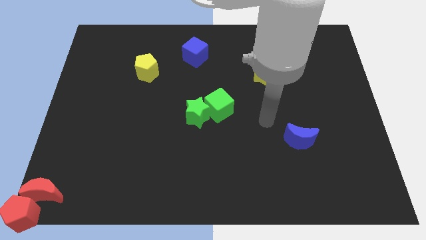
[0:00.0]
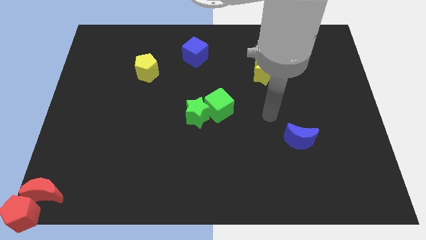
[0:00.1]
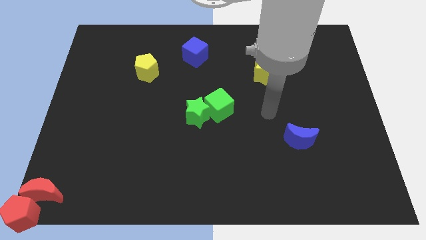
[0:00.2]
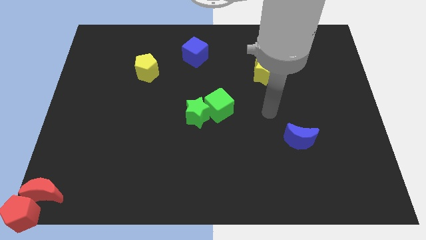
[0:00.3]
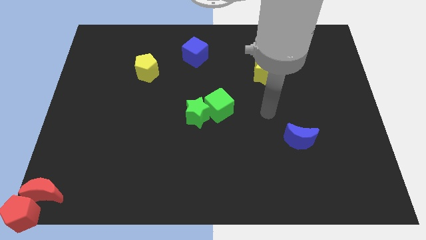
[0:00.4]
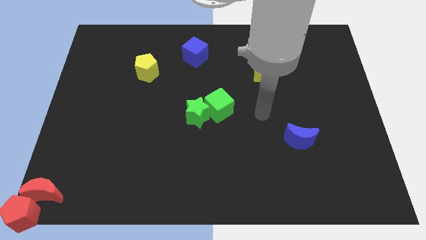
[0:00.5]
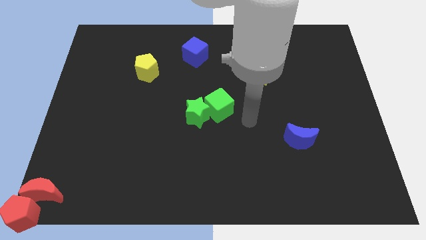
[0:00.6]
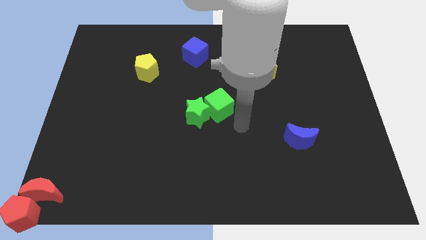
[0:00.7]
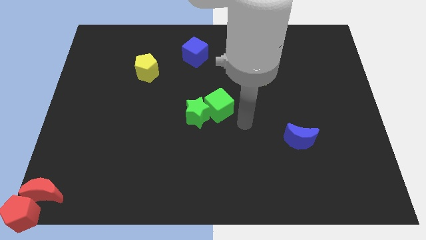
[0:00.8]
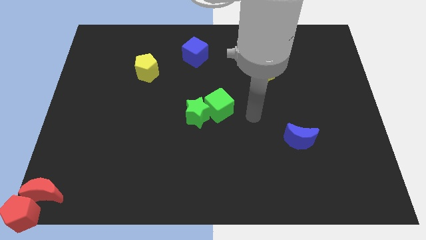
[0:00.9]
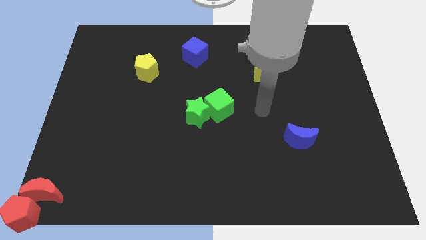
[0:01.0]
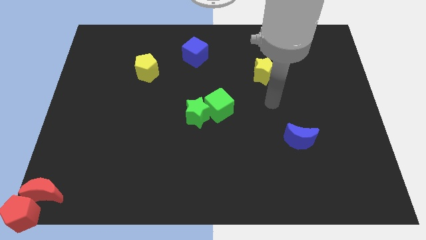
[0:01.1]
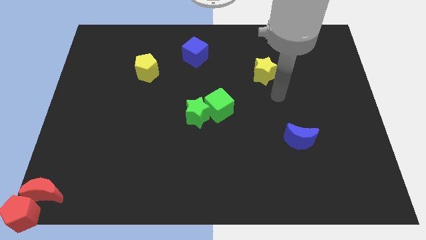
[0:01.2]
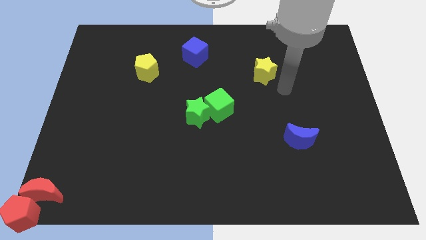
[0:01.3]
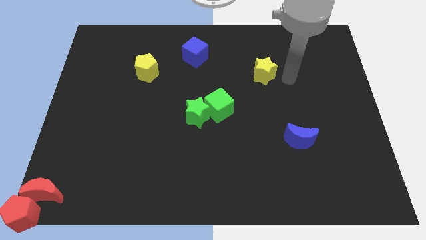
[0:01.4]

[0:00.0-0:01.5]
place your arm to the right of yellow star

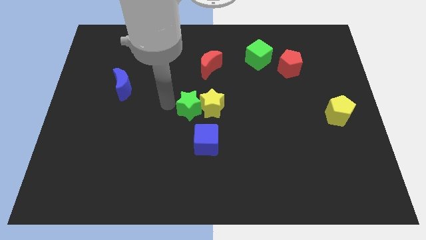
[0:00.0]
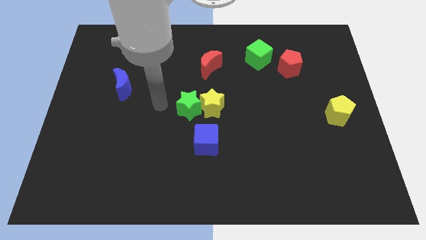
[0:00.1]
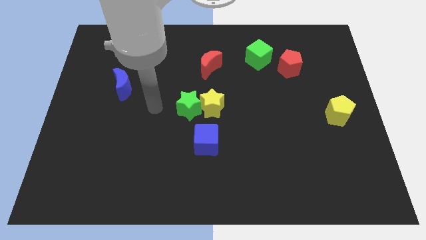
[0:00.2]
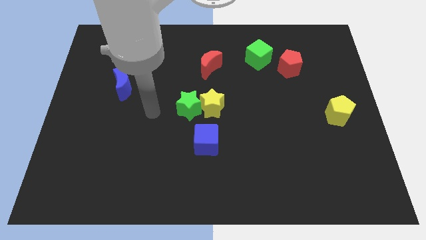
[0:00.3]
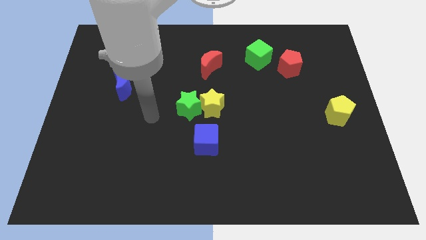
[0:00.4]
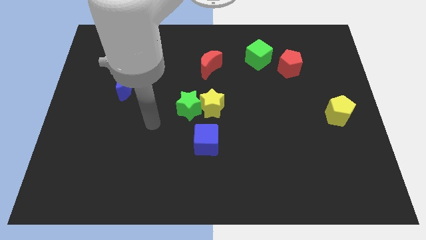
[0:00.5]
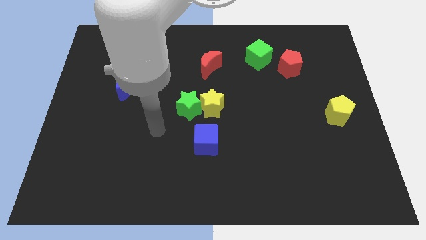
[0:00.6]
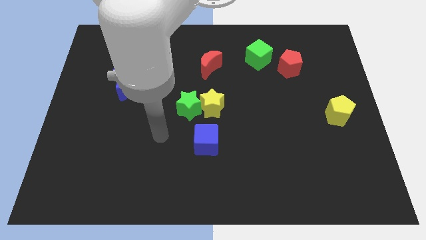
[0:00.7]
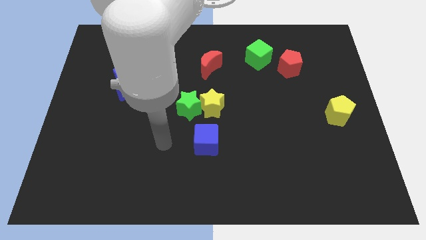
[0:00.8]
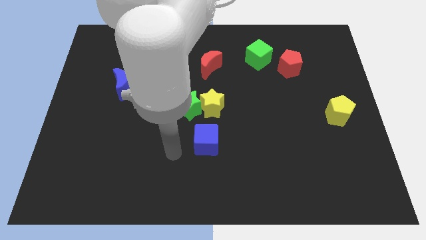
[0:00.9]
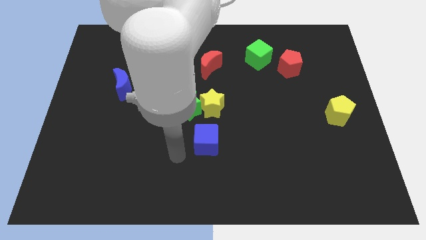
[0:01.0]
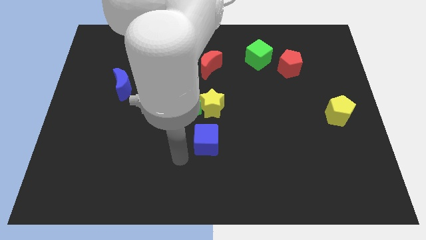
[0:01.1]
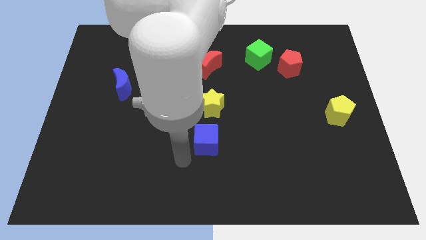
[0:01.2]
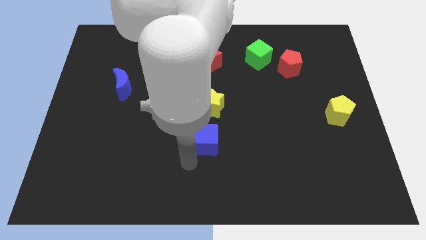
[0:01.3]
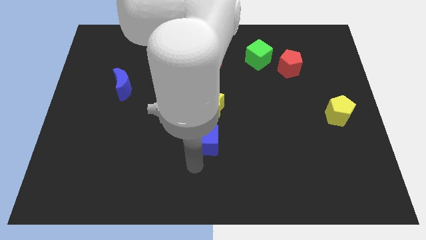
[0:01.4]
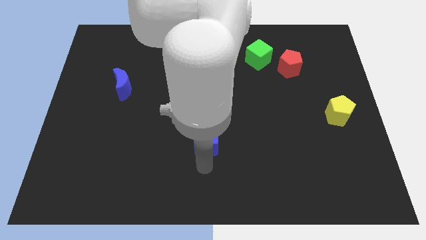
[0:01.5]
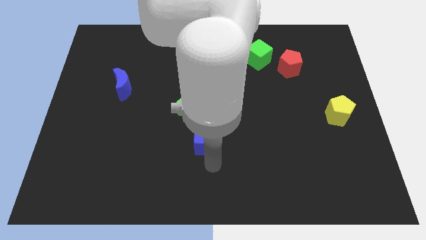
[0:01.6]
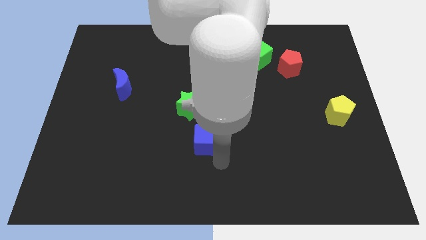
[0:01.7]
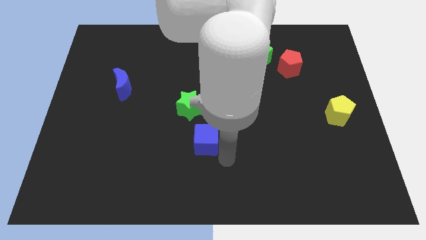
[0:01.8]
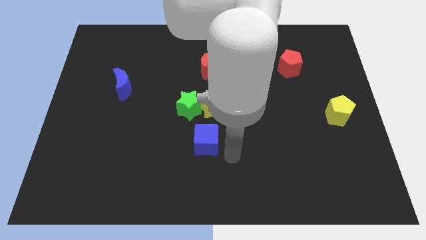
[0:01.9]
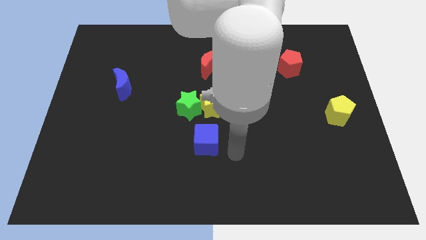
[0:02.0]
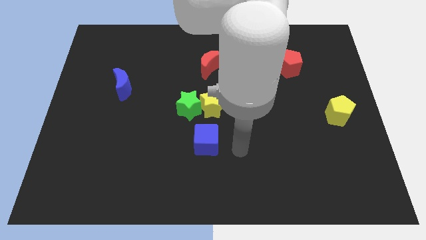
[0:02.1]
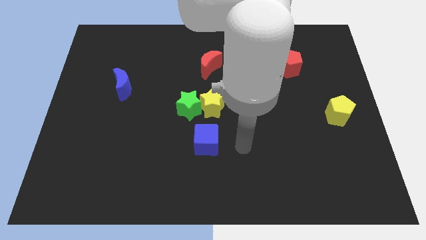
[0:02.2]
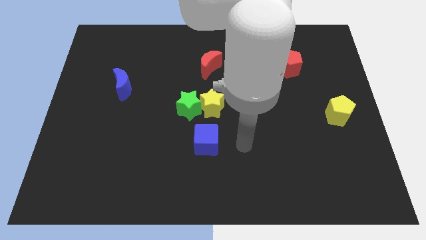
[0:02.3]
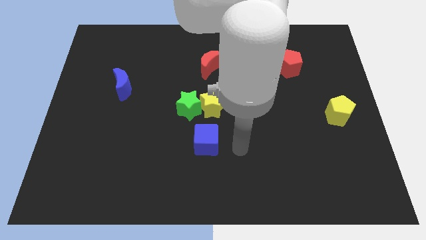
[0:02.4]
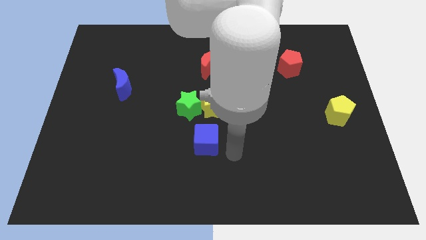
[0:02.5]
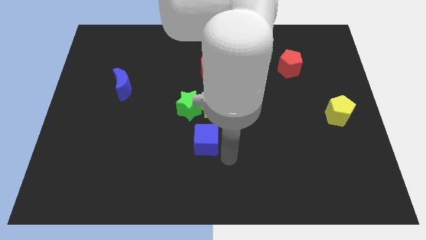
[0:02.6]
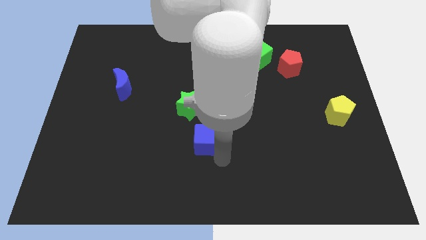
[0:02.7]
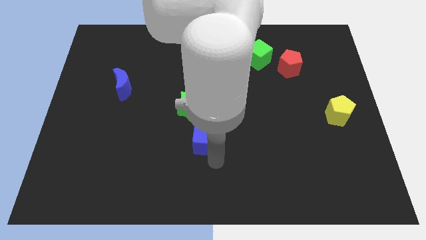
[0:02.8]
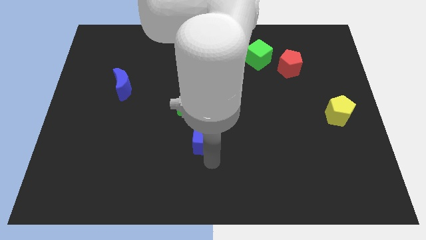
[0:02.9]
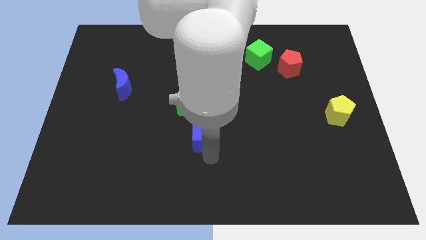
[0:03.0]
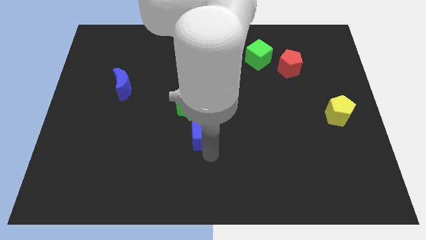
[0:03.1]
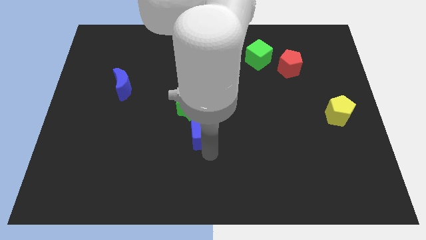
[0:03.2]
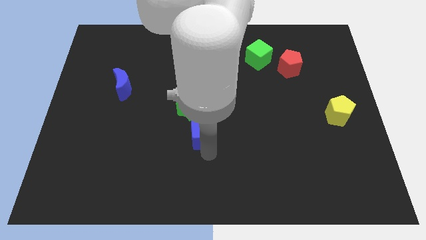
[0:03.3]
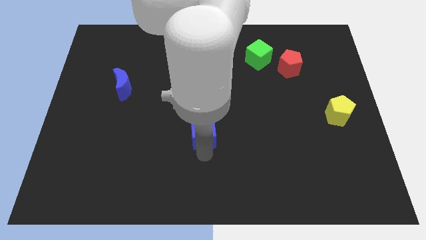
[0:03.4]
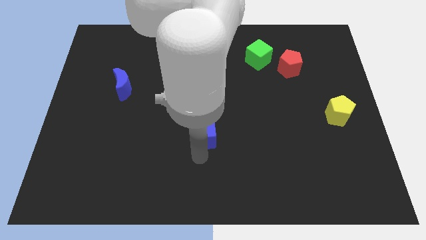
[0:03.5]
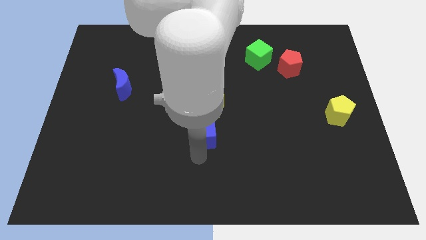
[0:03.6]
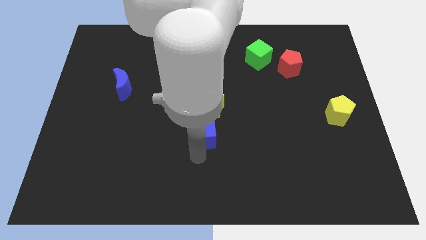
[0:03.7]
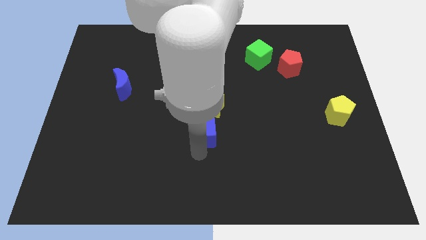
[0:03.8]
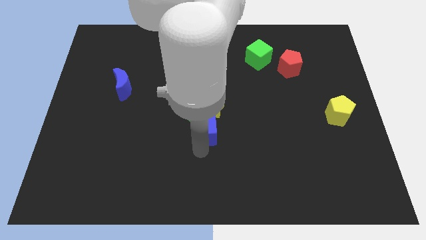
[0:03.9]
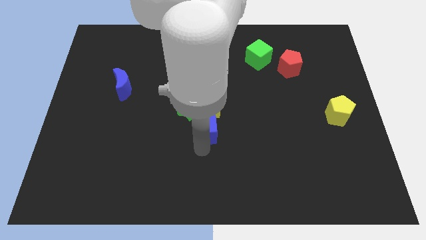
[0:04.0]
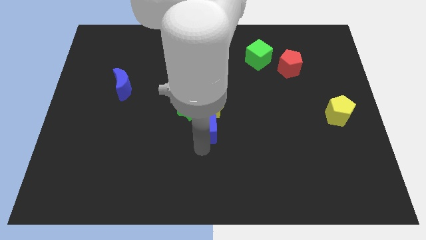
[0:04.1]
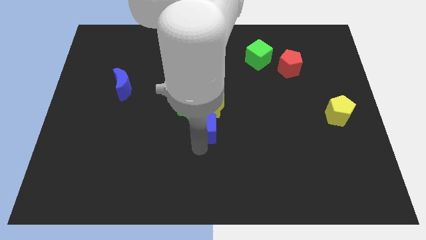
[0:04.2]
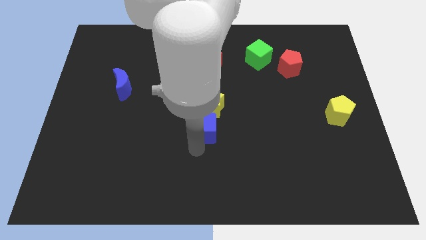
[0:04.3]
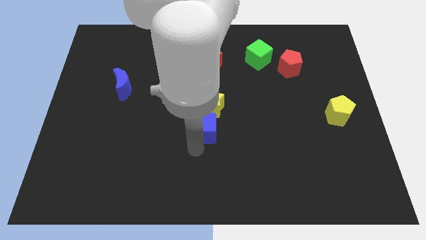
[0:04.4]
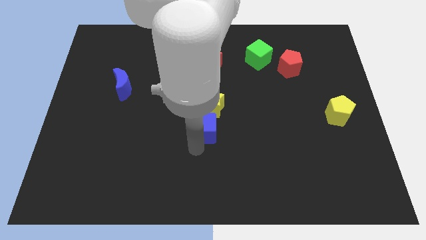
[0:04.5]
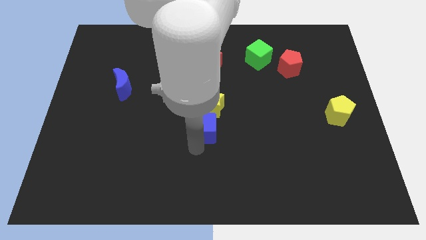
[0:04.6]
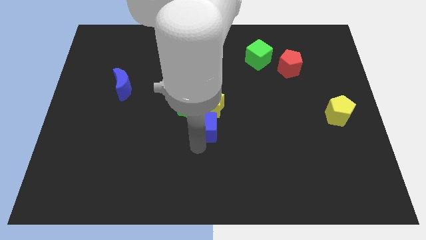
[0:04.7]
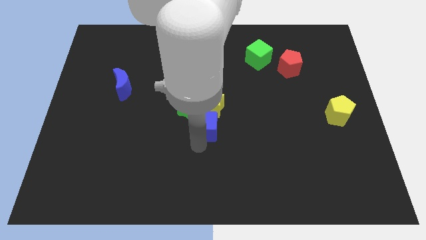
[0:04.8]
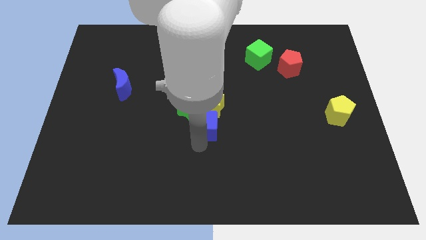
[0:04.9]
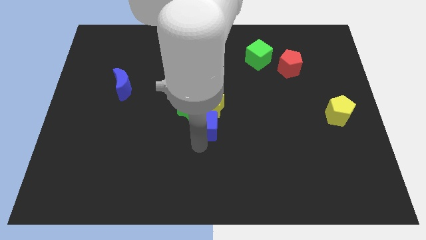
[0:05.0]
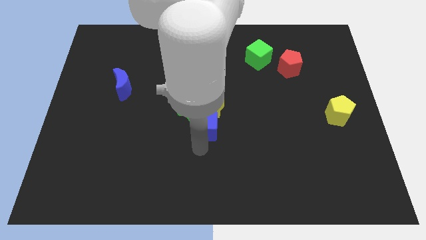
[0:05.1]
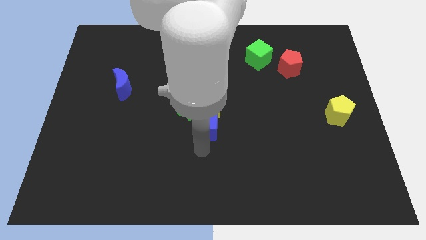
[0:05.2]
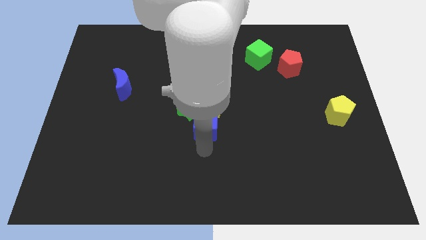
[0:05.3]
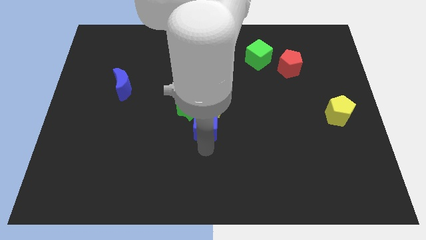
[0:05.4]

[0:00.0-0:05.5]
push the blue cube into the stars

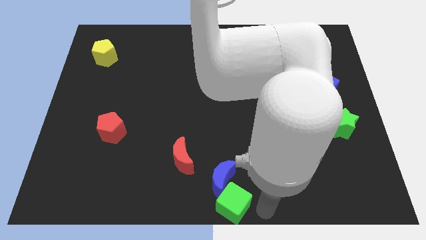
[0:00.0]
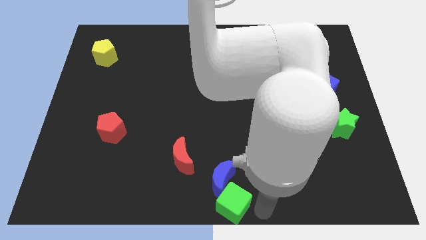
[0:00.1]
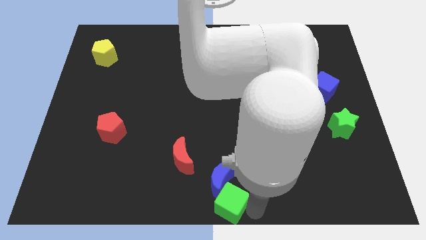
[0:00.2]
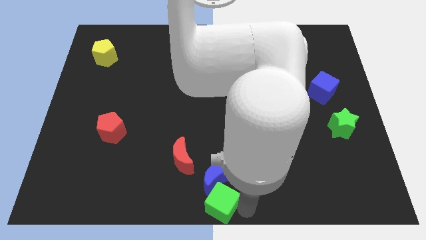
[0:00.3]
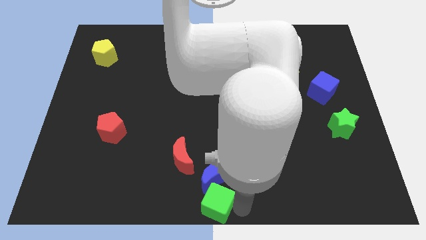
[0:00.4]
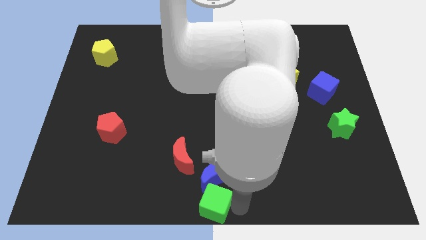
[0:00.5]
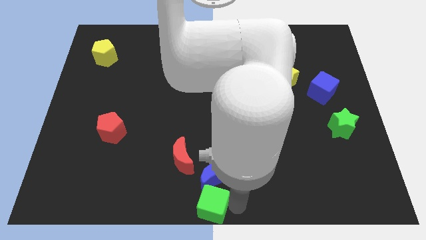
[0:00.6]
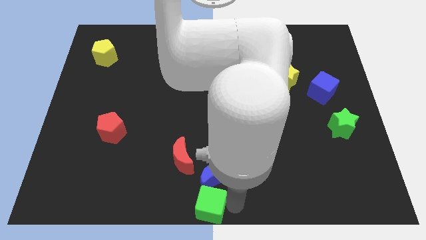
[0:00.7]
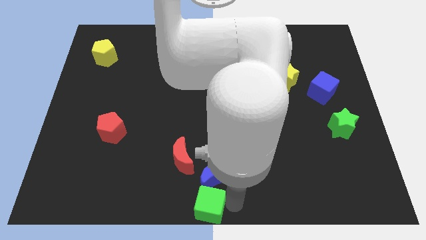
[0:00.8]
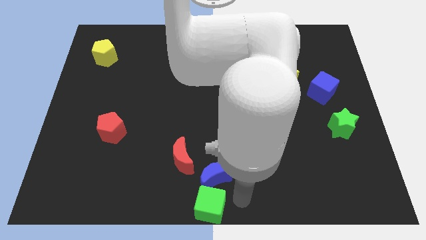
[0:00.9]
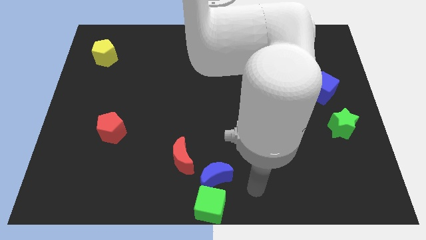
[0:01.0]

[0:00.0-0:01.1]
place green cube below blue moon

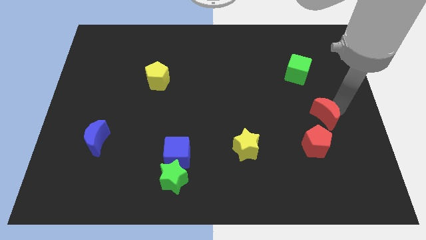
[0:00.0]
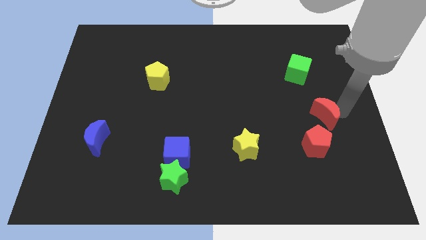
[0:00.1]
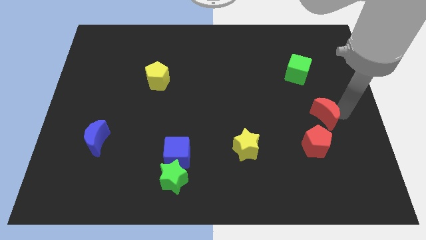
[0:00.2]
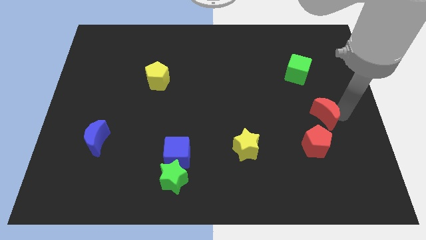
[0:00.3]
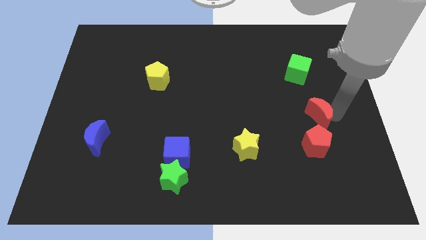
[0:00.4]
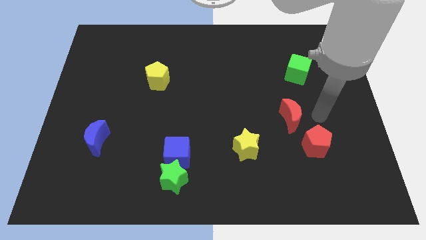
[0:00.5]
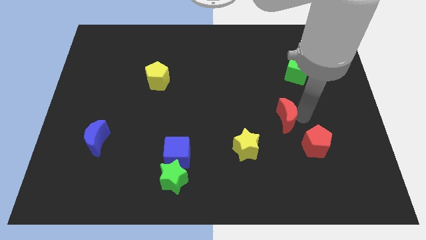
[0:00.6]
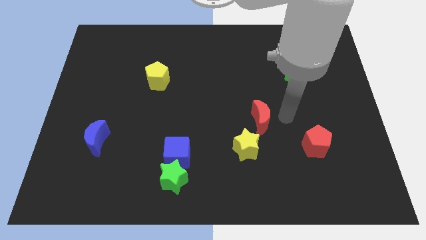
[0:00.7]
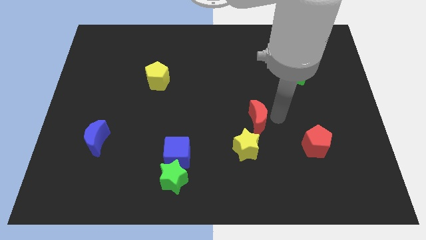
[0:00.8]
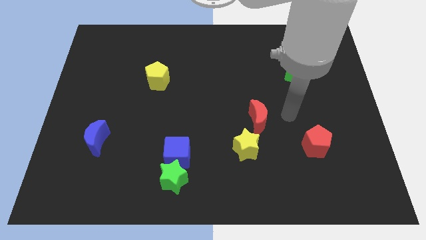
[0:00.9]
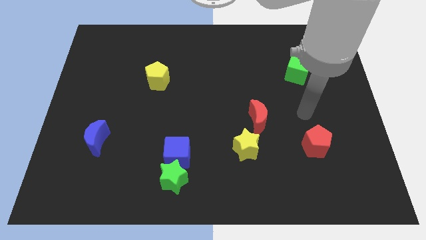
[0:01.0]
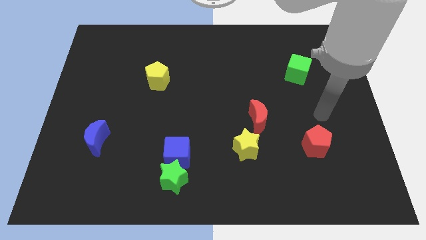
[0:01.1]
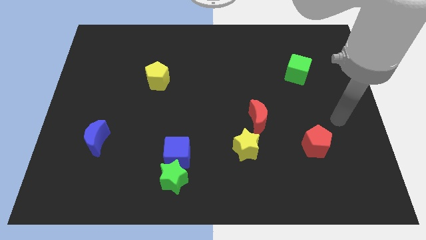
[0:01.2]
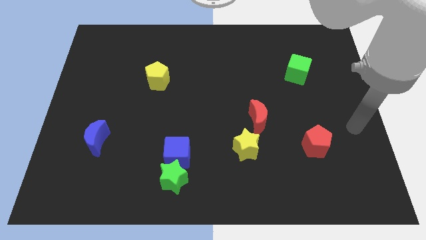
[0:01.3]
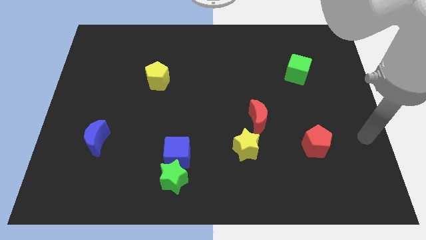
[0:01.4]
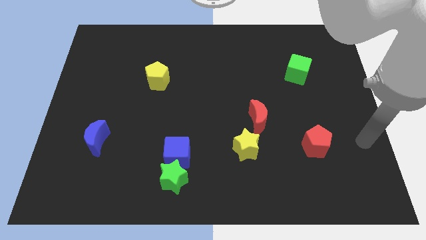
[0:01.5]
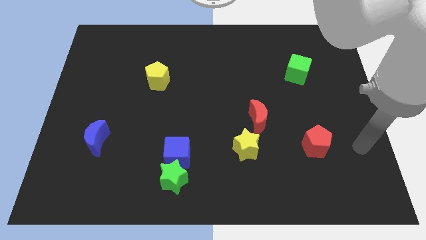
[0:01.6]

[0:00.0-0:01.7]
place the red moon at the top right of the yellow star
